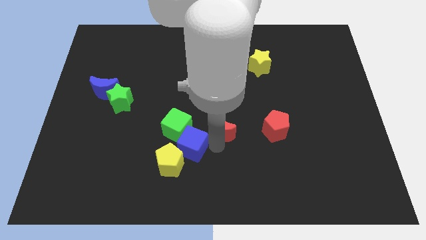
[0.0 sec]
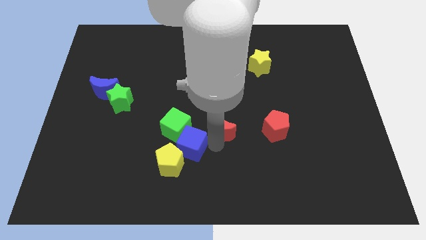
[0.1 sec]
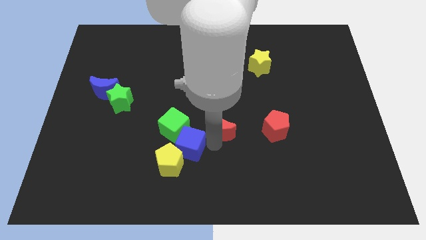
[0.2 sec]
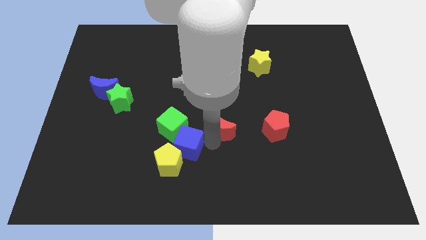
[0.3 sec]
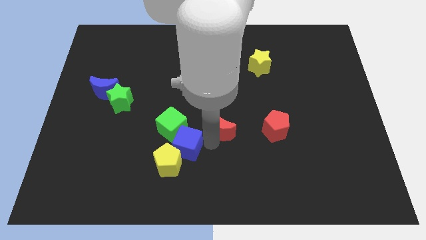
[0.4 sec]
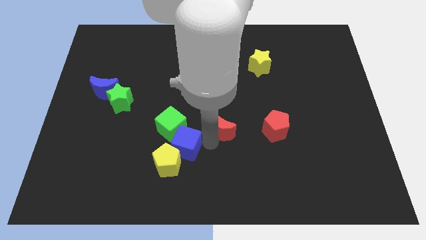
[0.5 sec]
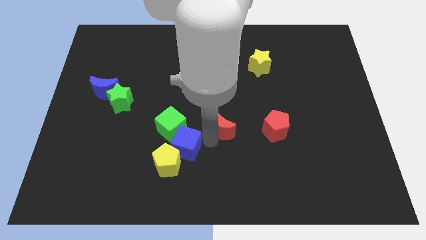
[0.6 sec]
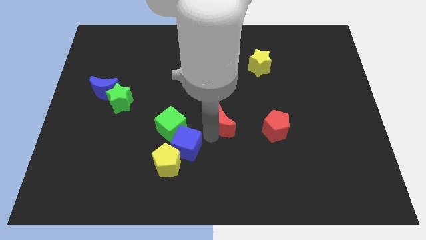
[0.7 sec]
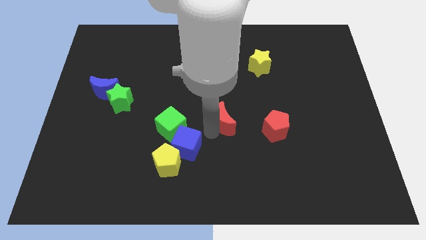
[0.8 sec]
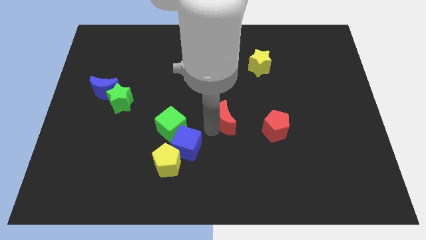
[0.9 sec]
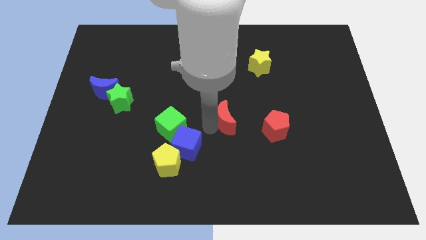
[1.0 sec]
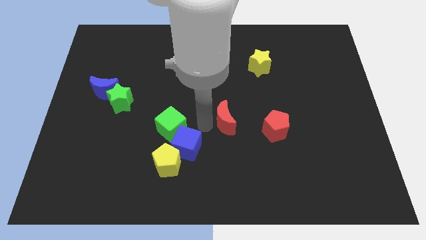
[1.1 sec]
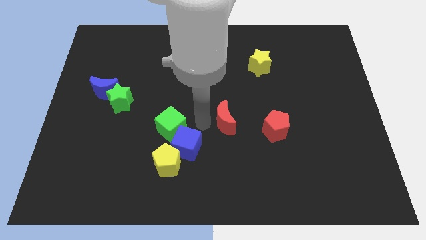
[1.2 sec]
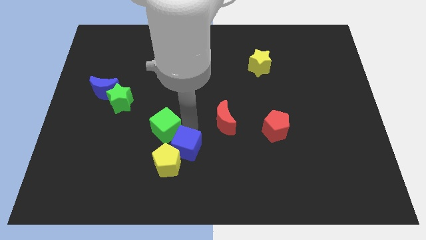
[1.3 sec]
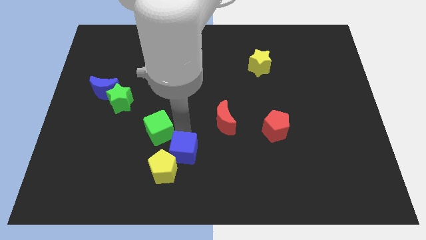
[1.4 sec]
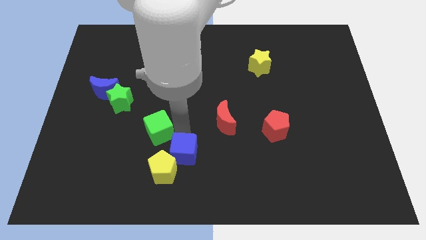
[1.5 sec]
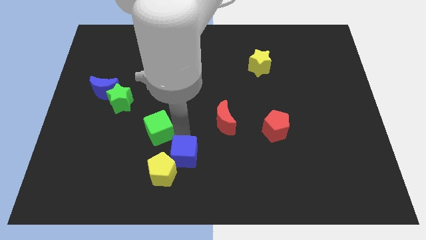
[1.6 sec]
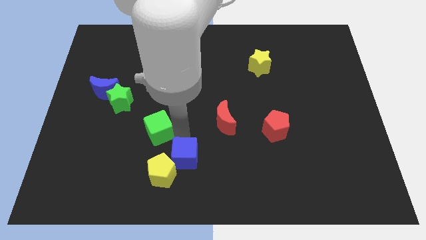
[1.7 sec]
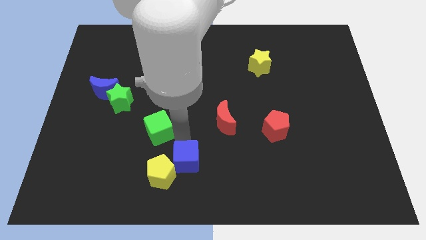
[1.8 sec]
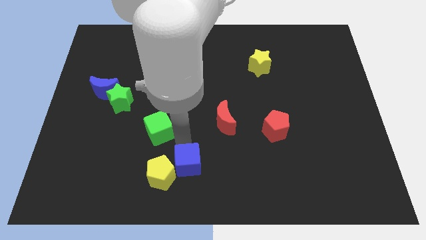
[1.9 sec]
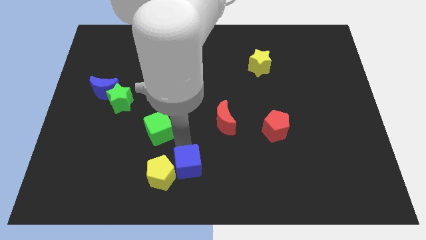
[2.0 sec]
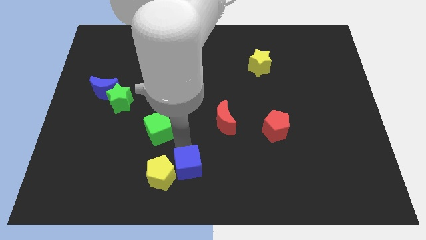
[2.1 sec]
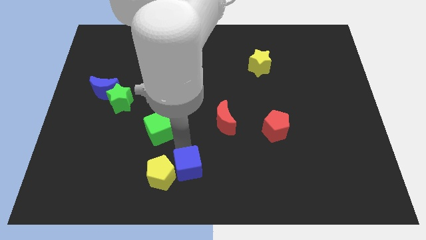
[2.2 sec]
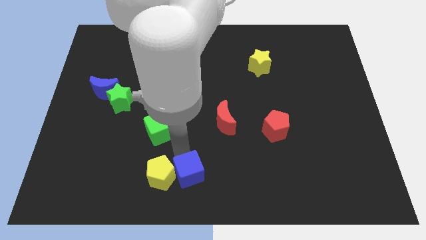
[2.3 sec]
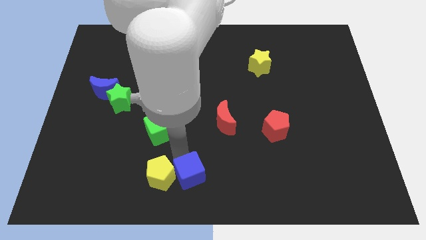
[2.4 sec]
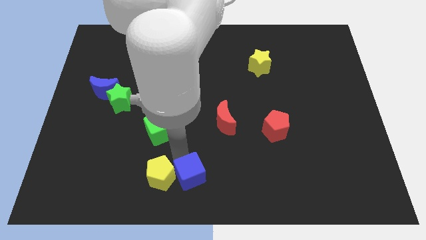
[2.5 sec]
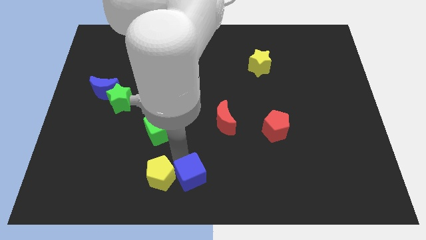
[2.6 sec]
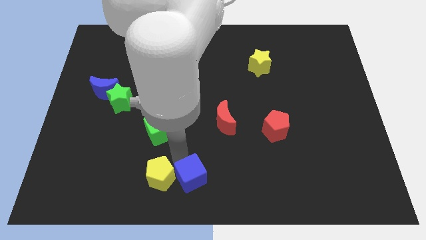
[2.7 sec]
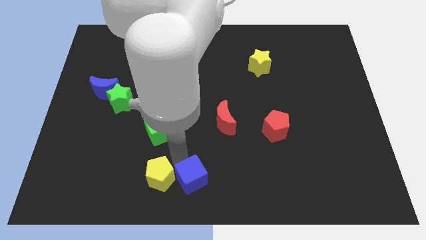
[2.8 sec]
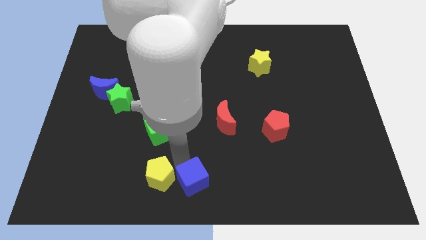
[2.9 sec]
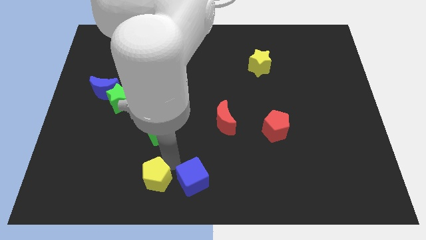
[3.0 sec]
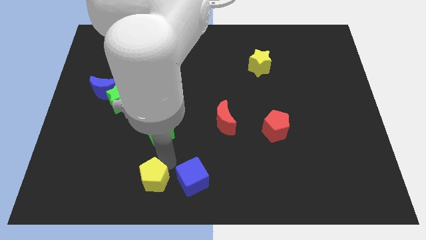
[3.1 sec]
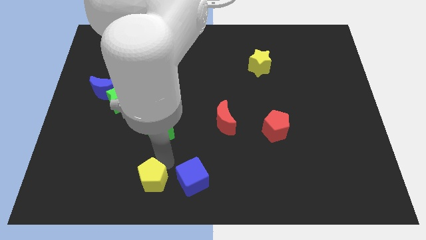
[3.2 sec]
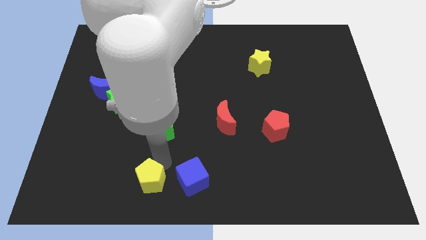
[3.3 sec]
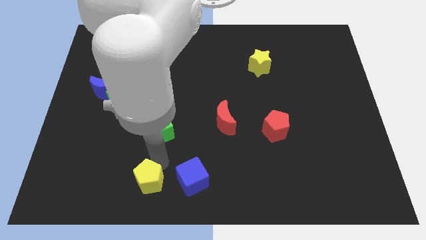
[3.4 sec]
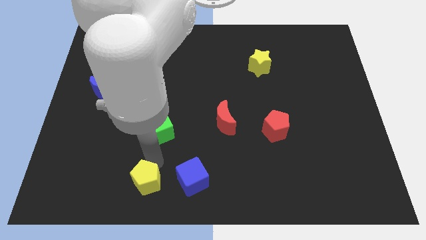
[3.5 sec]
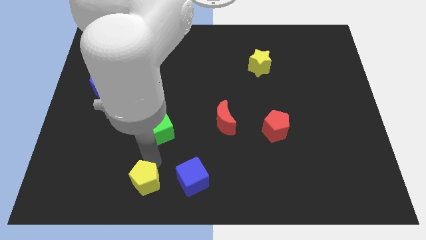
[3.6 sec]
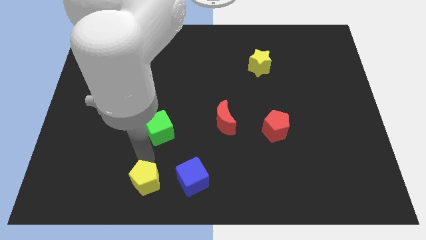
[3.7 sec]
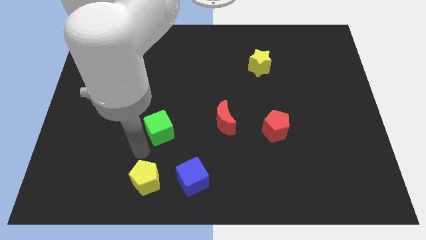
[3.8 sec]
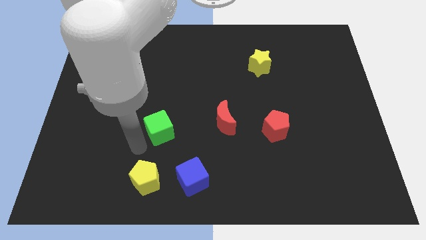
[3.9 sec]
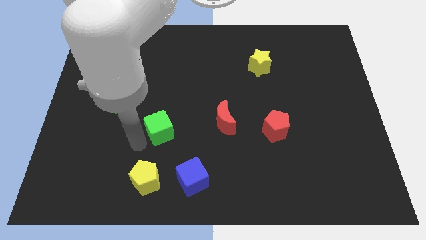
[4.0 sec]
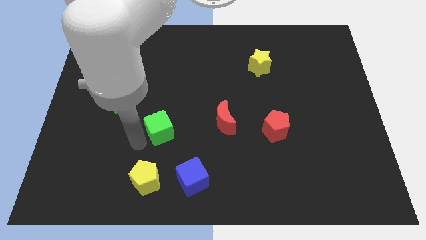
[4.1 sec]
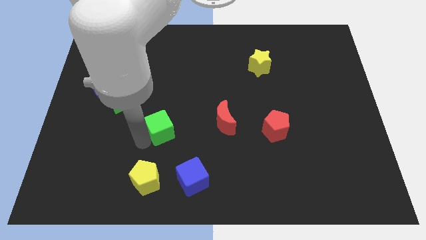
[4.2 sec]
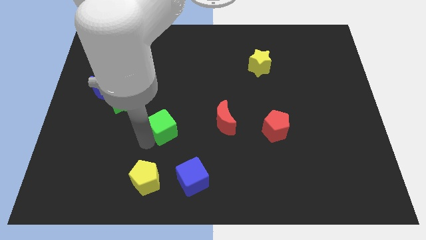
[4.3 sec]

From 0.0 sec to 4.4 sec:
push blue cube to the bottom

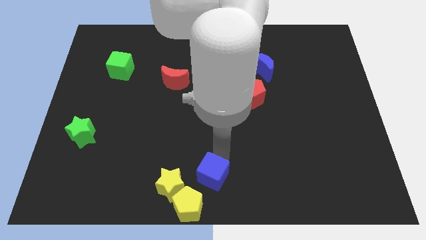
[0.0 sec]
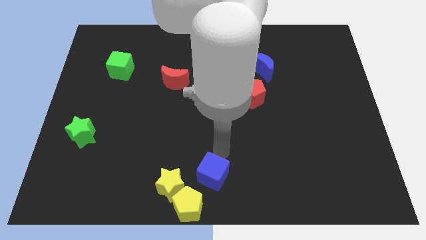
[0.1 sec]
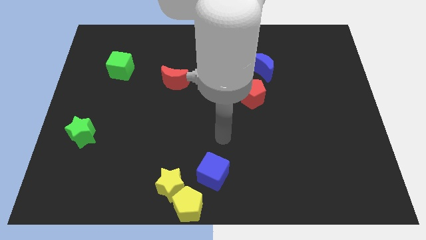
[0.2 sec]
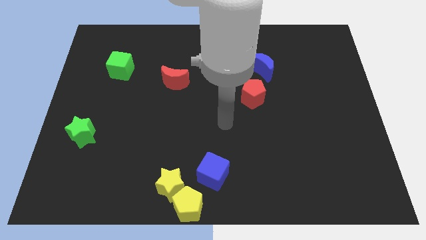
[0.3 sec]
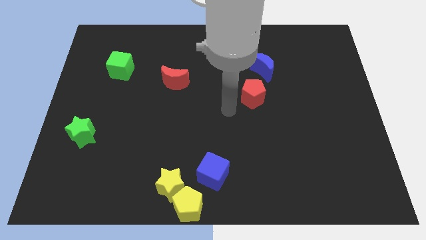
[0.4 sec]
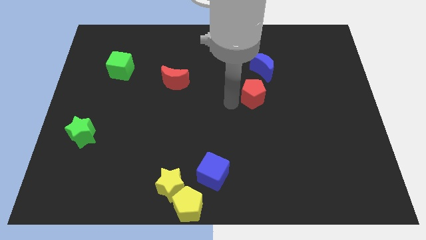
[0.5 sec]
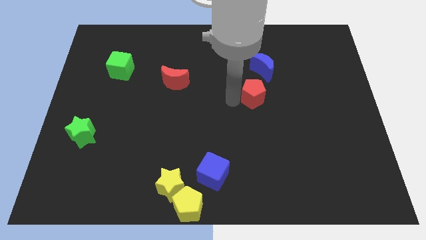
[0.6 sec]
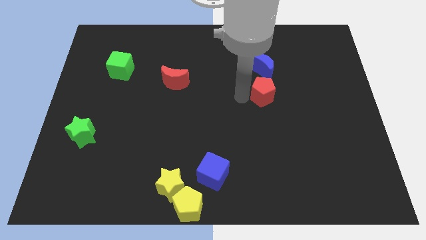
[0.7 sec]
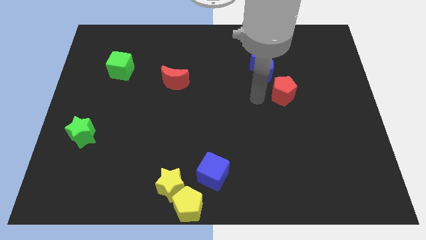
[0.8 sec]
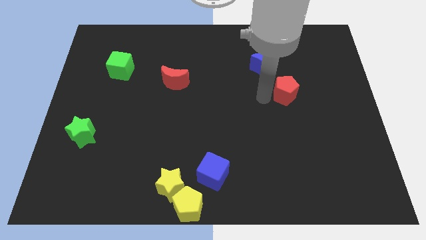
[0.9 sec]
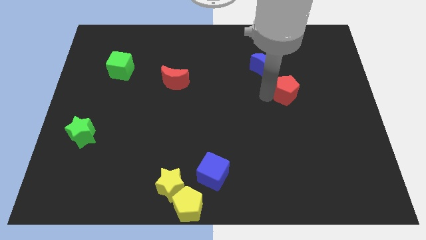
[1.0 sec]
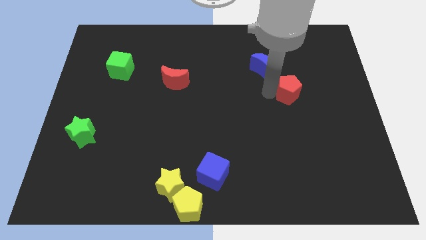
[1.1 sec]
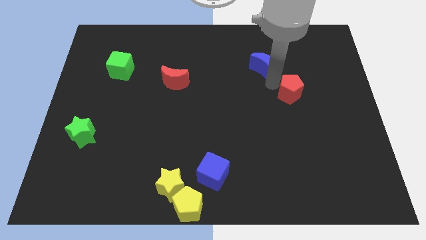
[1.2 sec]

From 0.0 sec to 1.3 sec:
put the red pentagon diagonally bottom right to the blue moon

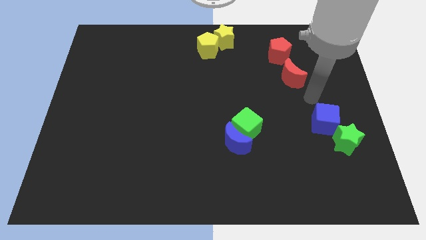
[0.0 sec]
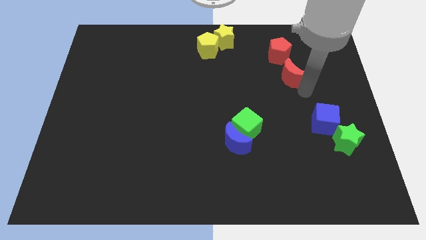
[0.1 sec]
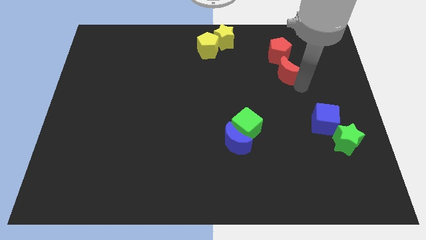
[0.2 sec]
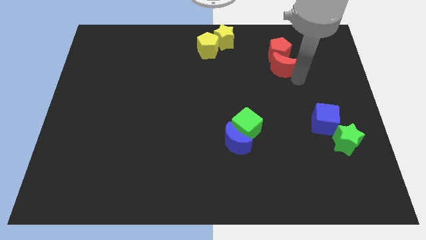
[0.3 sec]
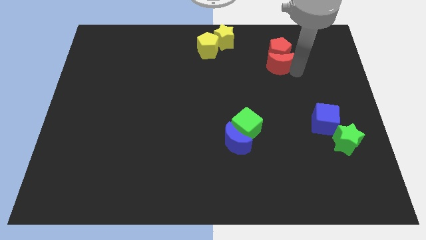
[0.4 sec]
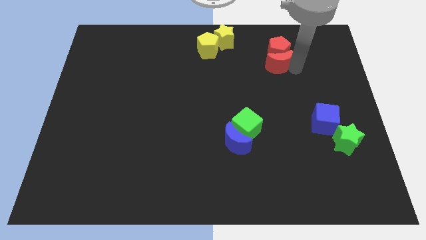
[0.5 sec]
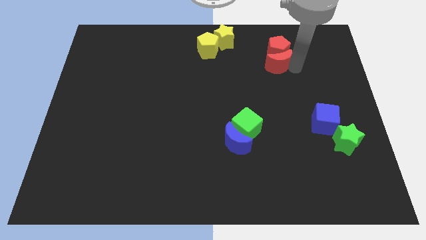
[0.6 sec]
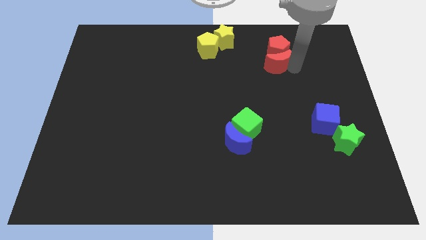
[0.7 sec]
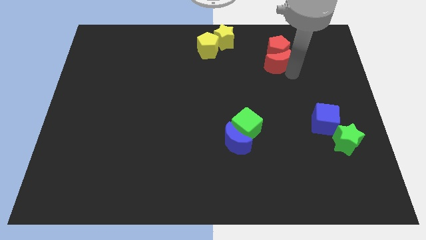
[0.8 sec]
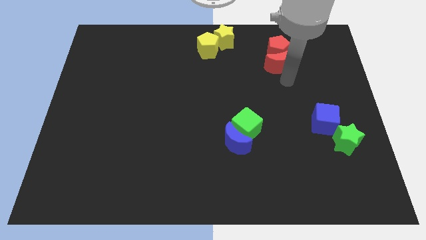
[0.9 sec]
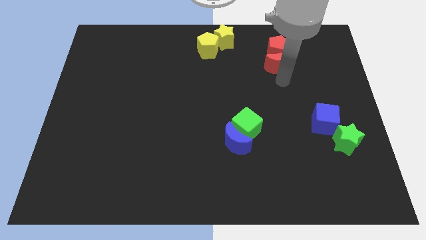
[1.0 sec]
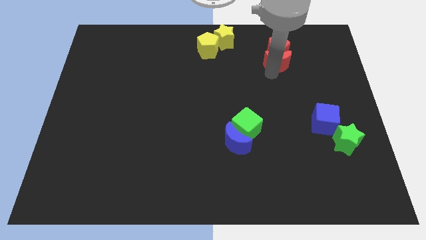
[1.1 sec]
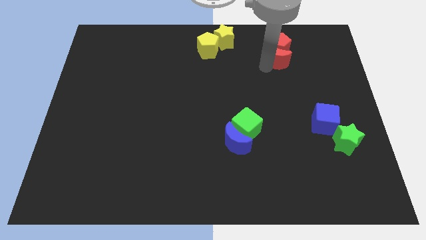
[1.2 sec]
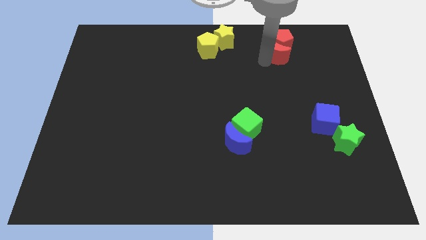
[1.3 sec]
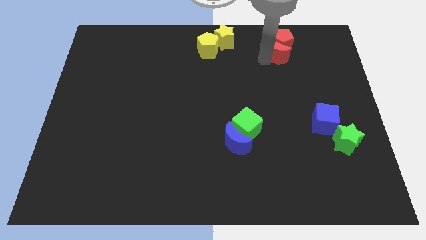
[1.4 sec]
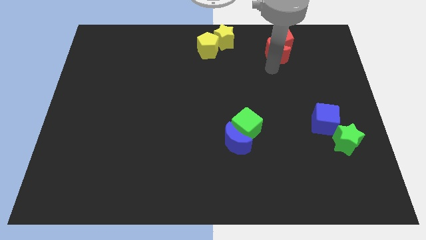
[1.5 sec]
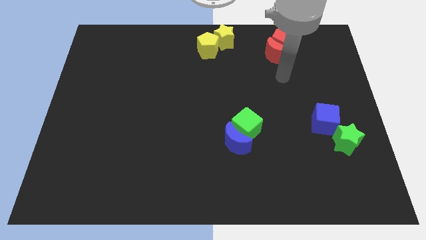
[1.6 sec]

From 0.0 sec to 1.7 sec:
push the red crescent and red pentagon towards the top side of the board

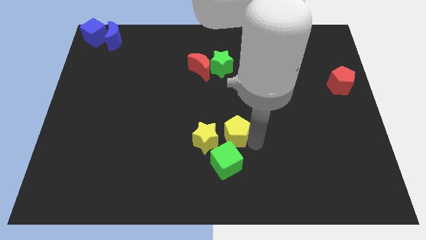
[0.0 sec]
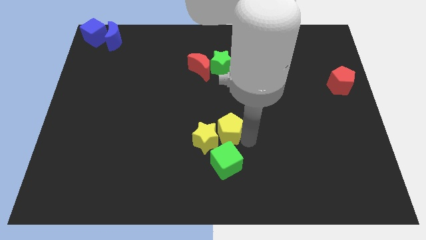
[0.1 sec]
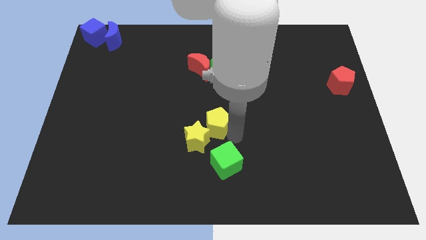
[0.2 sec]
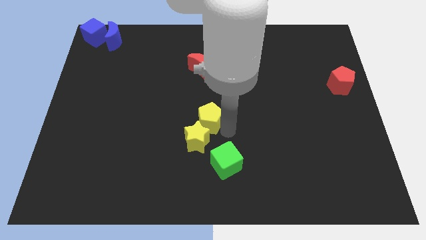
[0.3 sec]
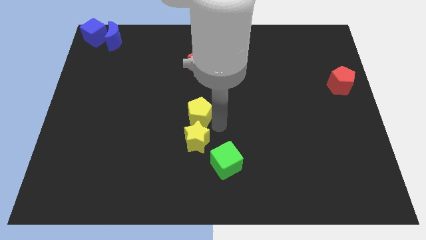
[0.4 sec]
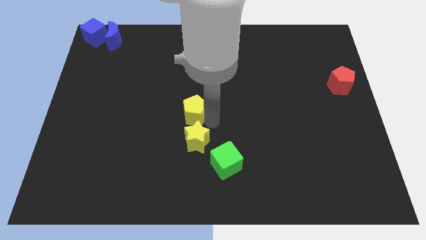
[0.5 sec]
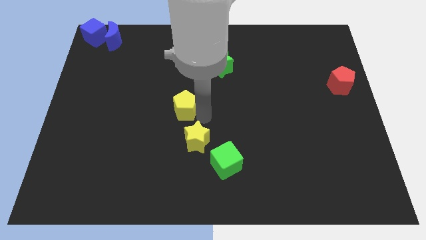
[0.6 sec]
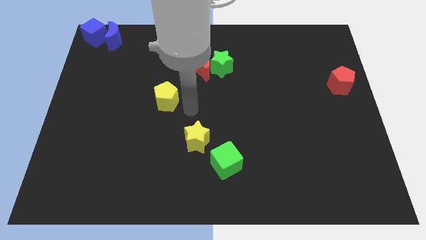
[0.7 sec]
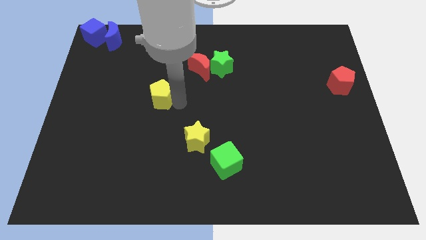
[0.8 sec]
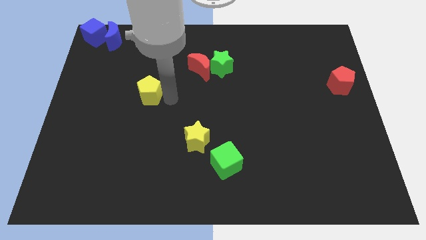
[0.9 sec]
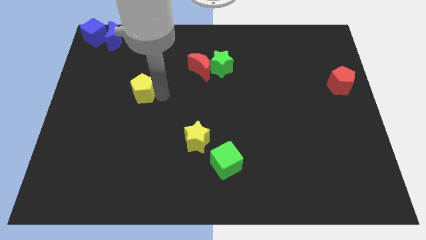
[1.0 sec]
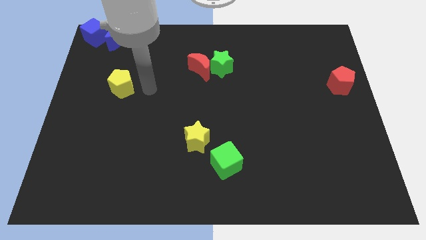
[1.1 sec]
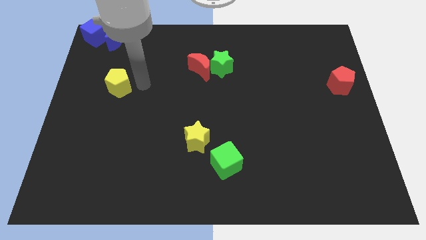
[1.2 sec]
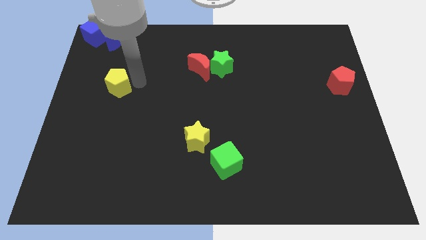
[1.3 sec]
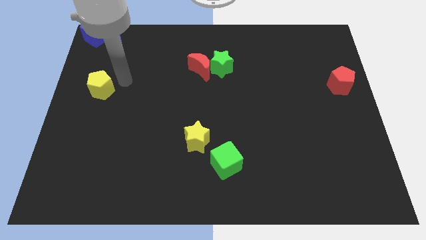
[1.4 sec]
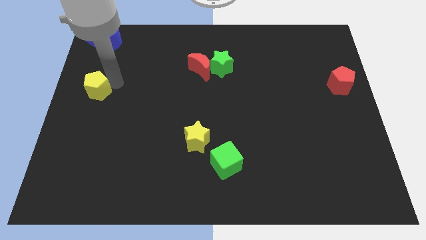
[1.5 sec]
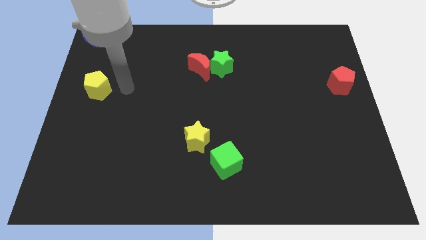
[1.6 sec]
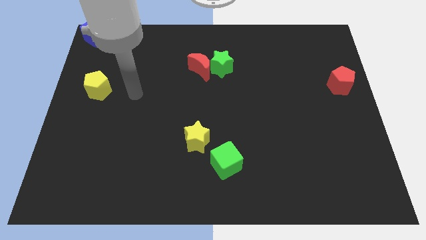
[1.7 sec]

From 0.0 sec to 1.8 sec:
push the yellow pentagon to the bottom of the blue crescent
